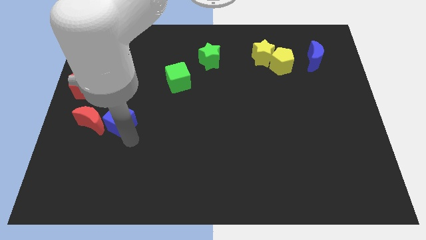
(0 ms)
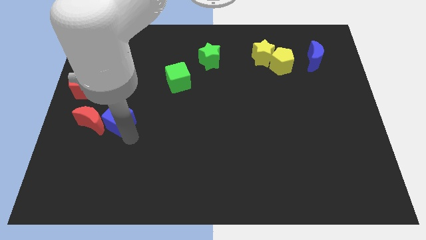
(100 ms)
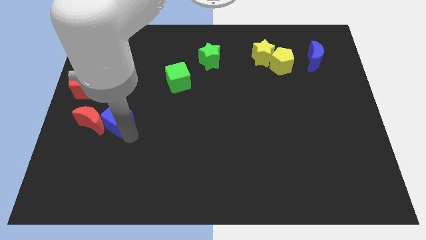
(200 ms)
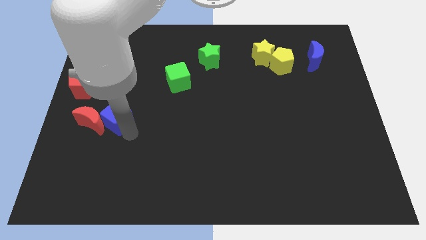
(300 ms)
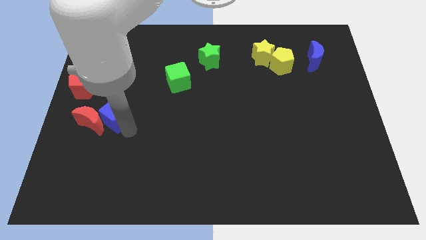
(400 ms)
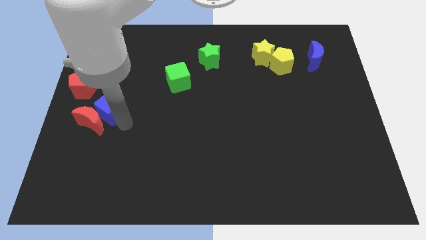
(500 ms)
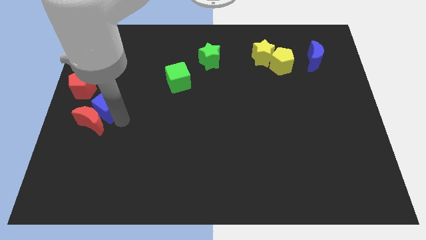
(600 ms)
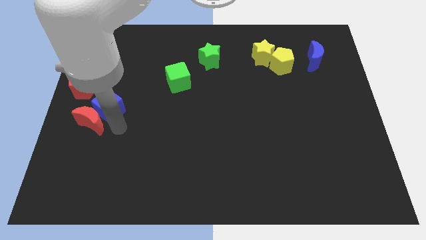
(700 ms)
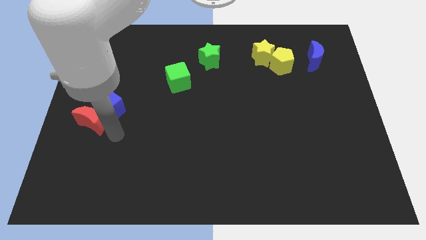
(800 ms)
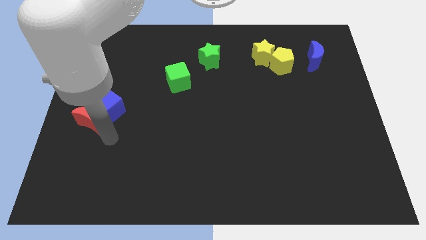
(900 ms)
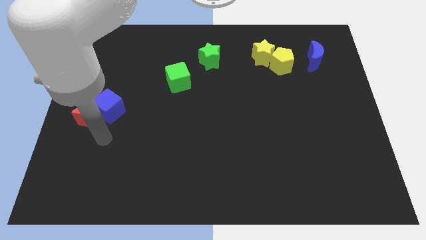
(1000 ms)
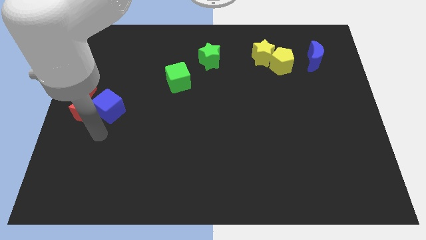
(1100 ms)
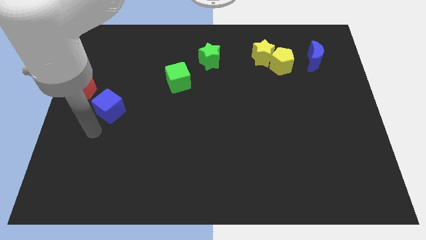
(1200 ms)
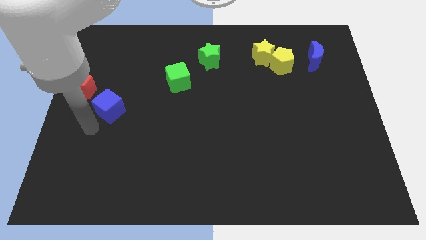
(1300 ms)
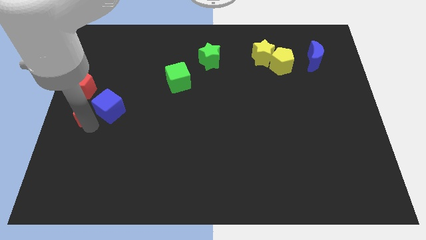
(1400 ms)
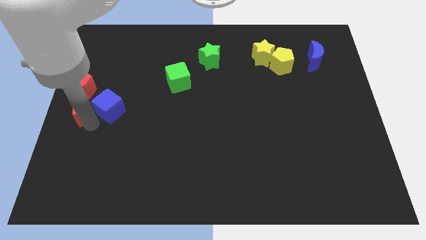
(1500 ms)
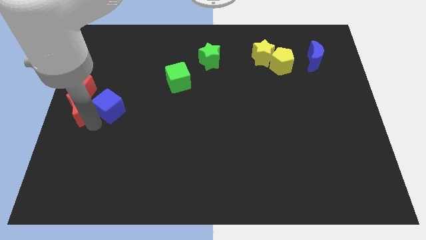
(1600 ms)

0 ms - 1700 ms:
push red moon blue cube towards red pentagon

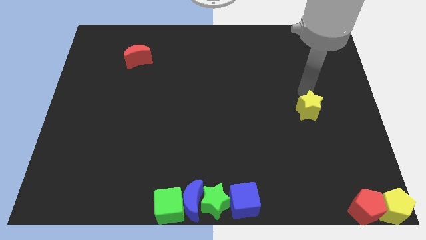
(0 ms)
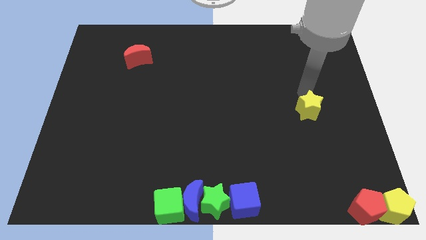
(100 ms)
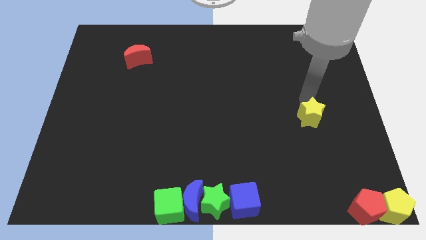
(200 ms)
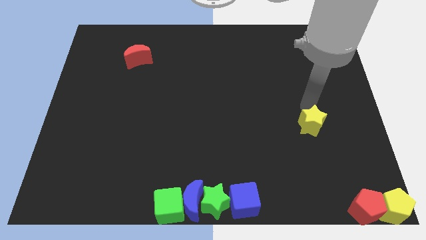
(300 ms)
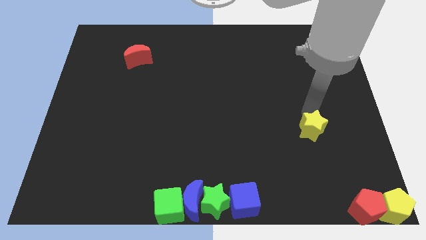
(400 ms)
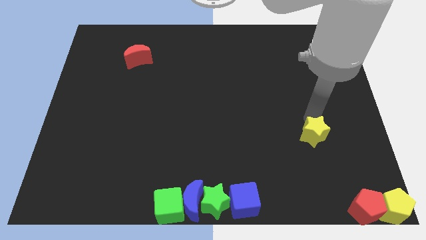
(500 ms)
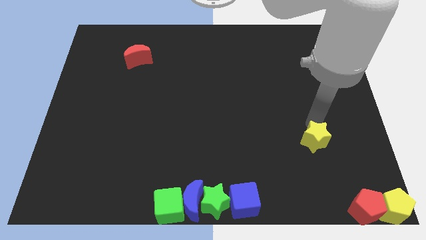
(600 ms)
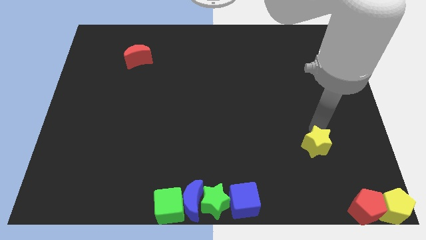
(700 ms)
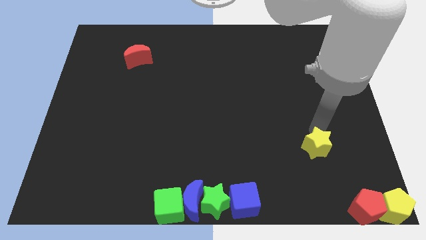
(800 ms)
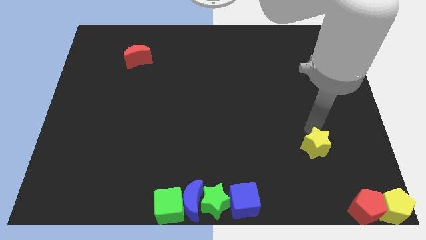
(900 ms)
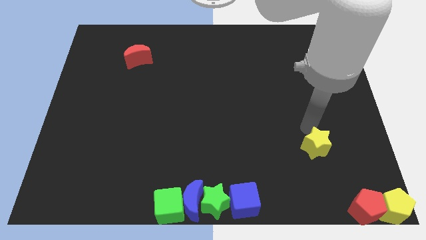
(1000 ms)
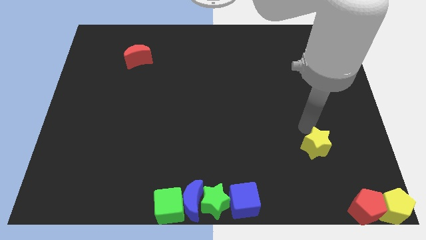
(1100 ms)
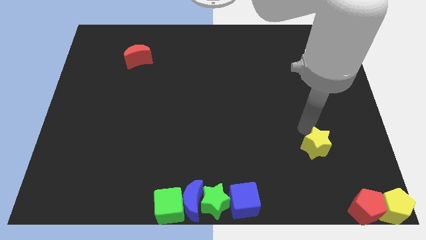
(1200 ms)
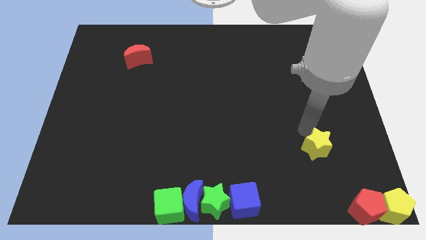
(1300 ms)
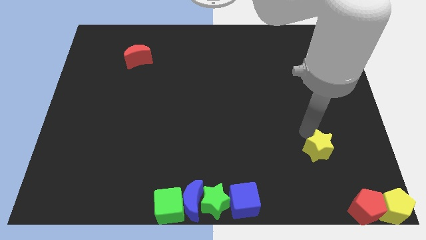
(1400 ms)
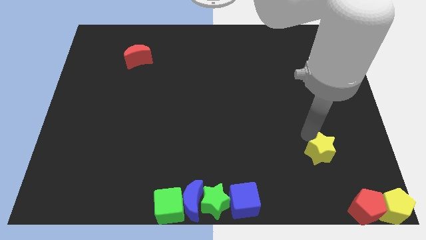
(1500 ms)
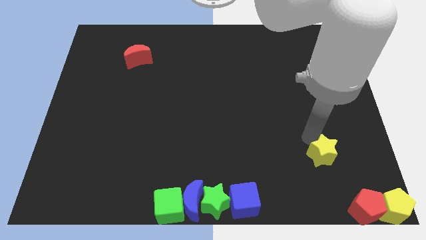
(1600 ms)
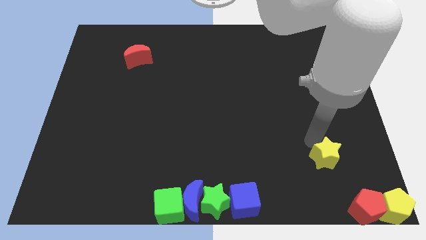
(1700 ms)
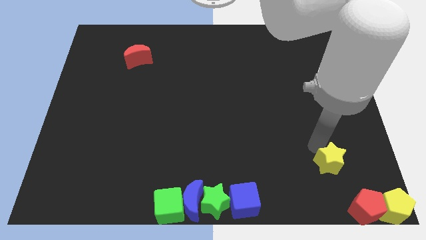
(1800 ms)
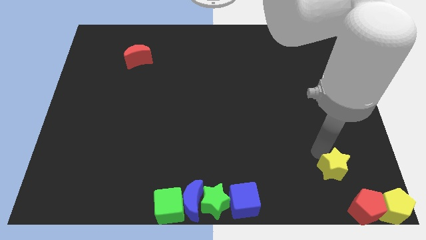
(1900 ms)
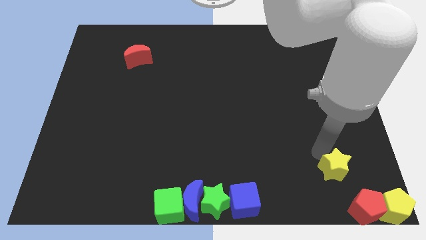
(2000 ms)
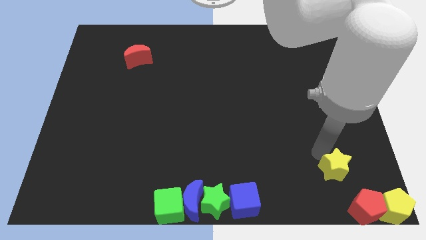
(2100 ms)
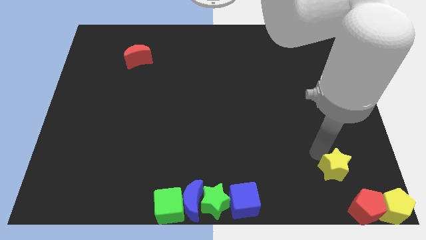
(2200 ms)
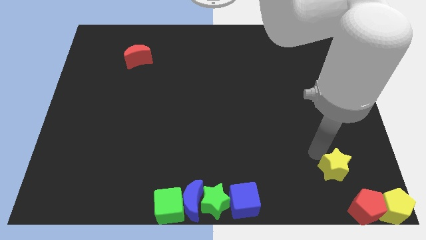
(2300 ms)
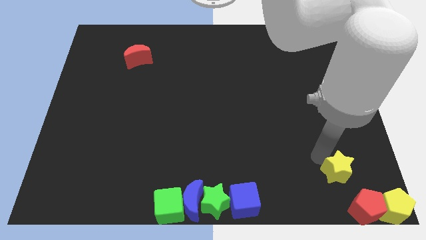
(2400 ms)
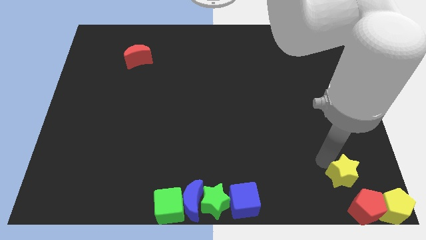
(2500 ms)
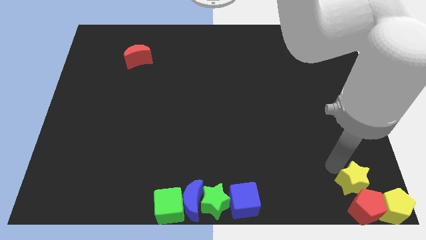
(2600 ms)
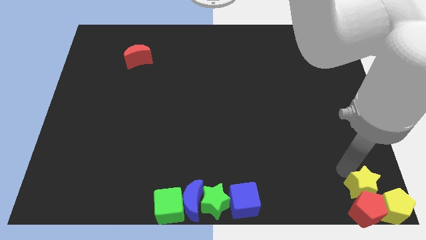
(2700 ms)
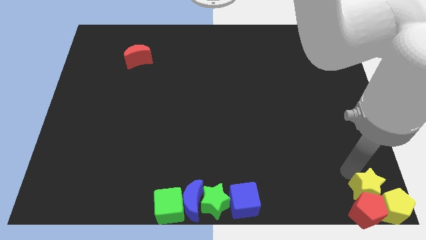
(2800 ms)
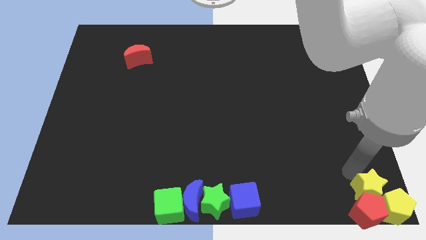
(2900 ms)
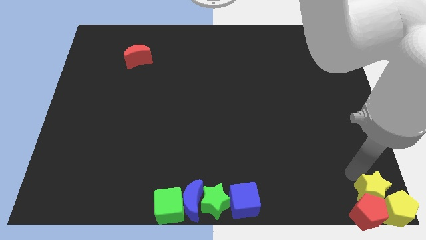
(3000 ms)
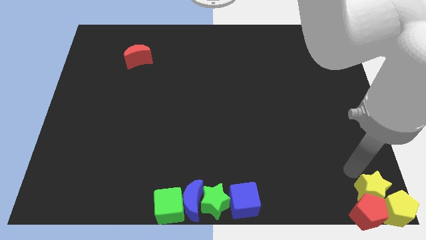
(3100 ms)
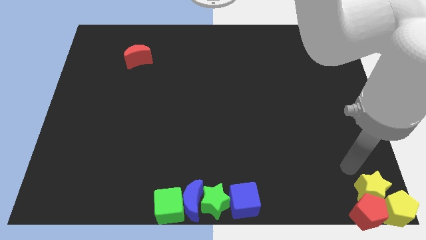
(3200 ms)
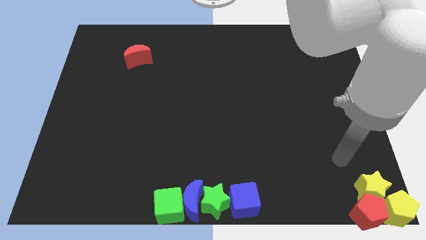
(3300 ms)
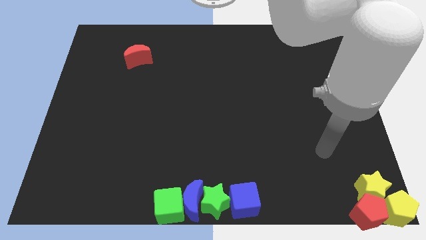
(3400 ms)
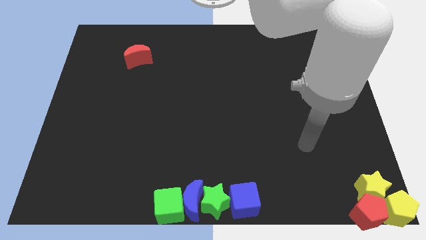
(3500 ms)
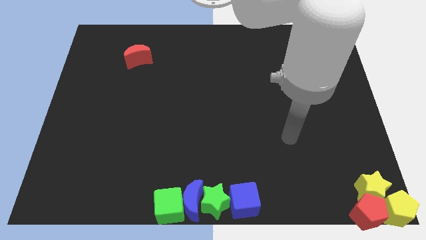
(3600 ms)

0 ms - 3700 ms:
move the yellow star into the yellow pentagon and red pentagon

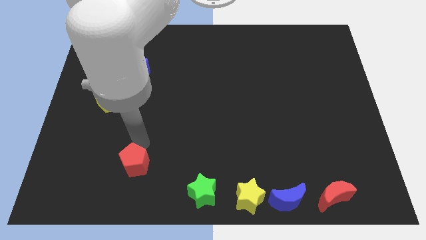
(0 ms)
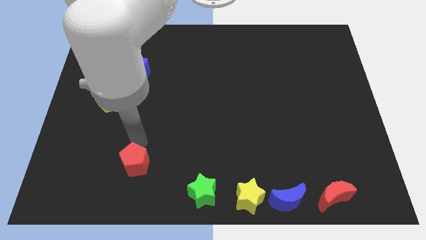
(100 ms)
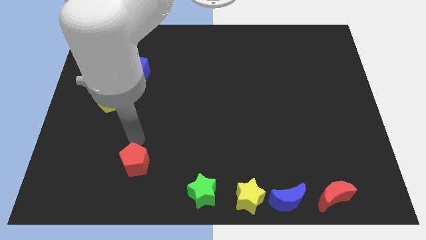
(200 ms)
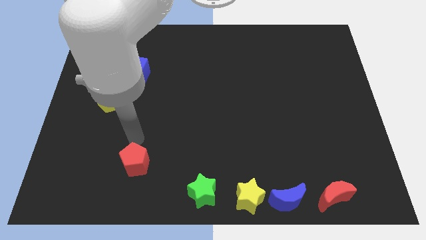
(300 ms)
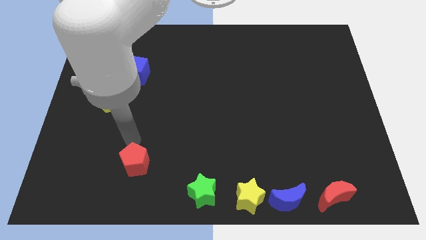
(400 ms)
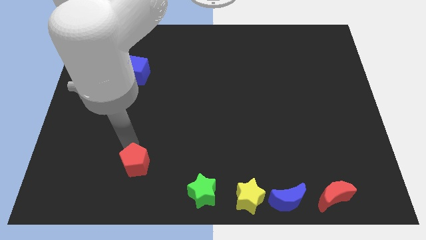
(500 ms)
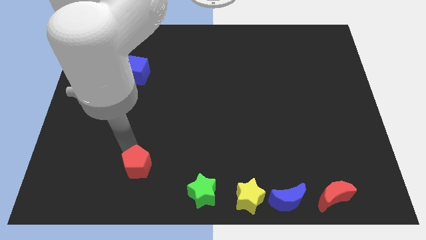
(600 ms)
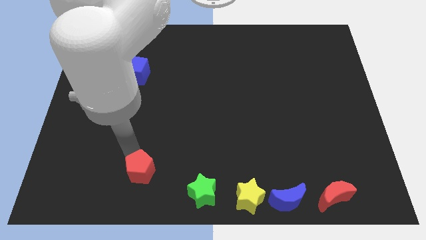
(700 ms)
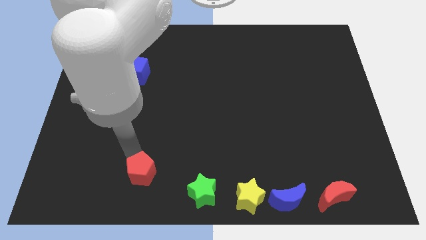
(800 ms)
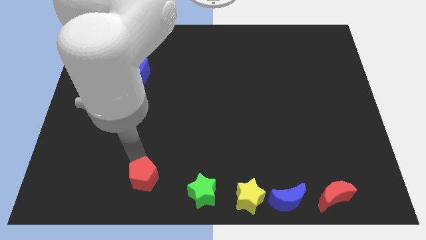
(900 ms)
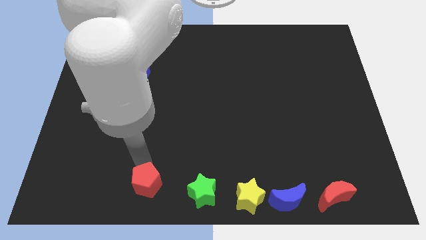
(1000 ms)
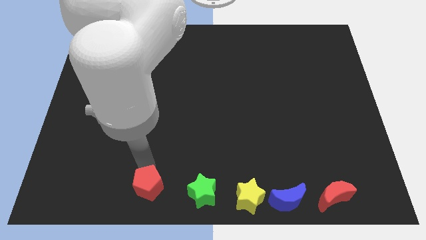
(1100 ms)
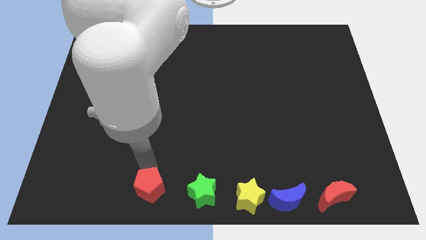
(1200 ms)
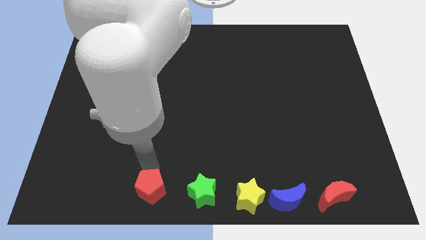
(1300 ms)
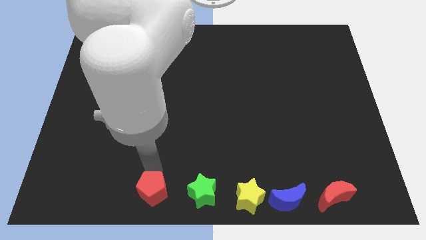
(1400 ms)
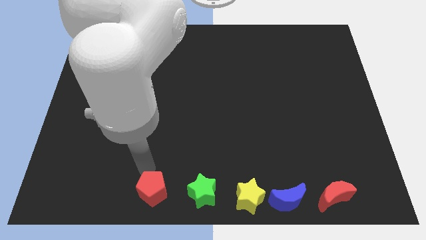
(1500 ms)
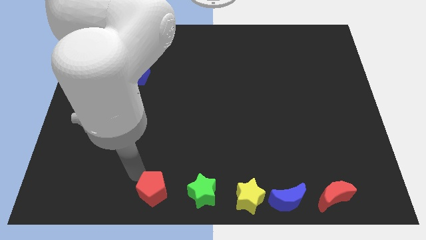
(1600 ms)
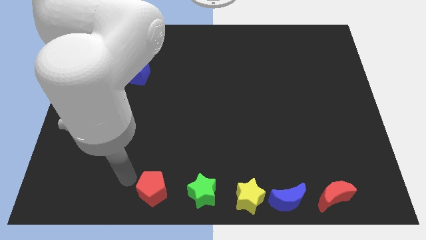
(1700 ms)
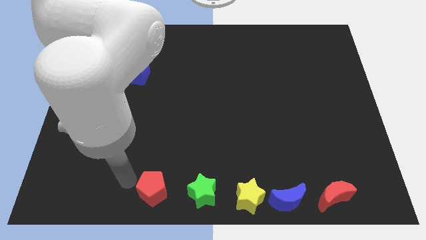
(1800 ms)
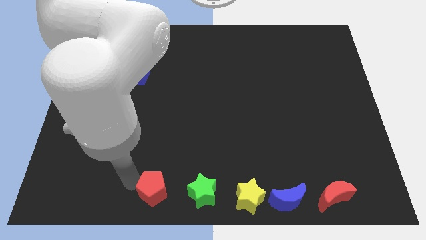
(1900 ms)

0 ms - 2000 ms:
place the red pentagon at left side of the green star

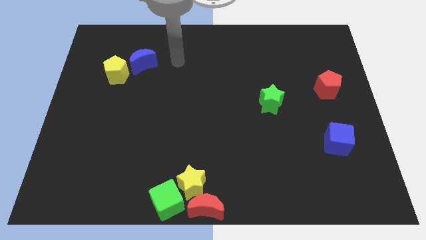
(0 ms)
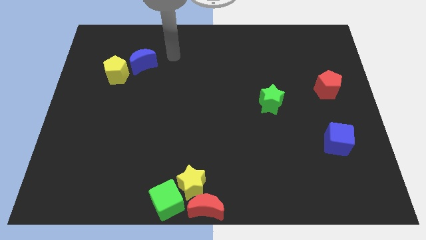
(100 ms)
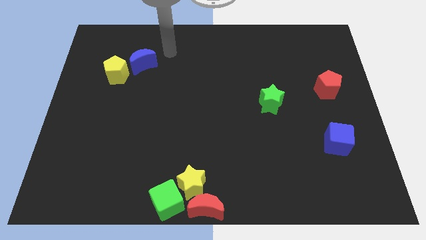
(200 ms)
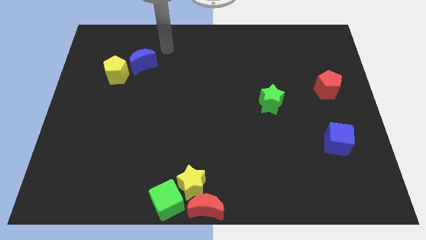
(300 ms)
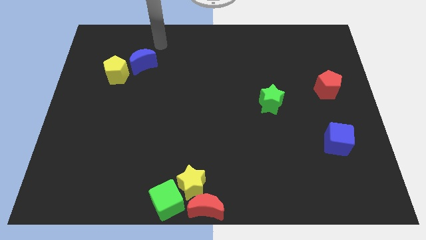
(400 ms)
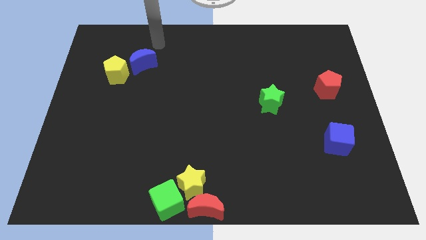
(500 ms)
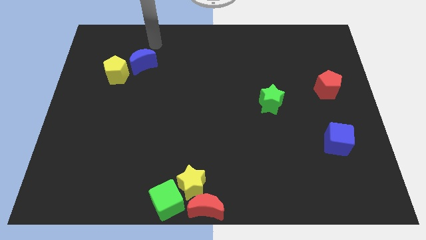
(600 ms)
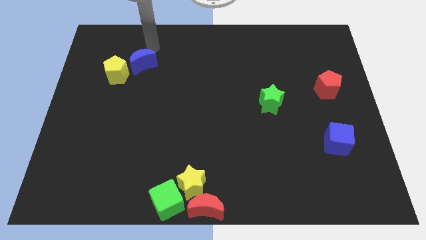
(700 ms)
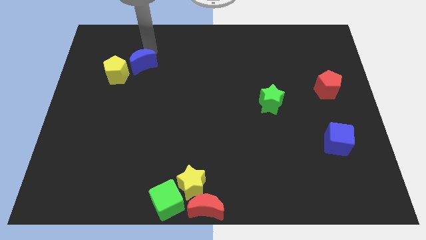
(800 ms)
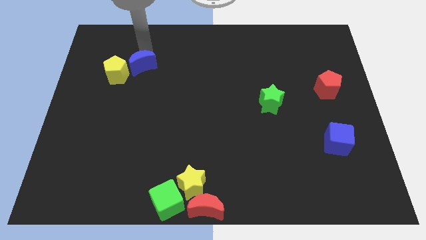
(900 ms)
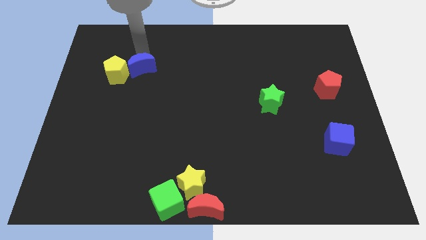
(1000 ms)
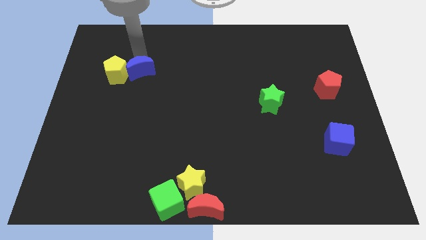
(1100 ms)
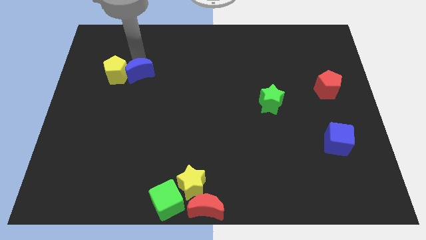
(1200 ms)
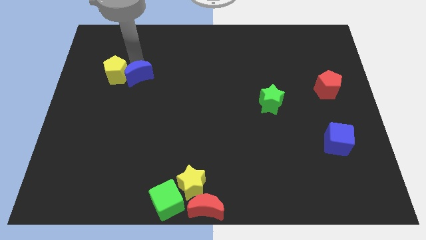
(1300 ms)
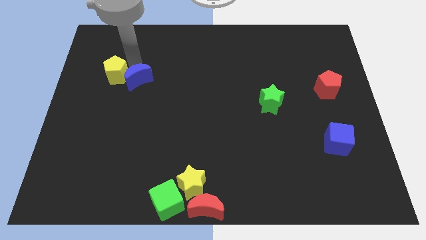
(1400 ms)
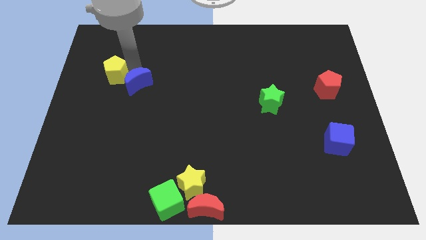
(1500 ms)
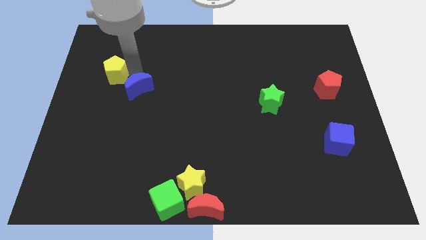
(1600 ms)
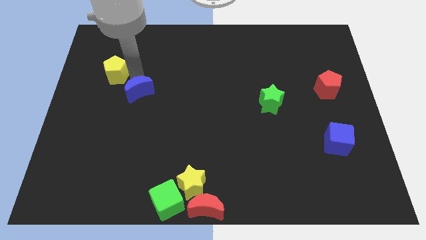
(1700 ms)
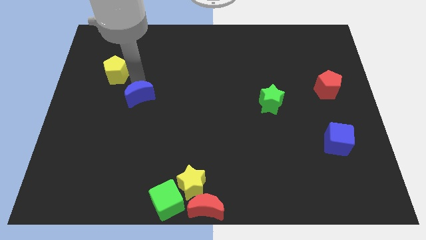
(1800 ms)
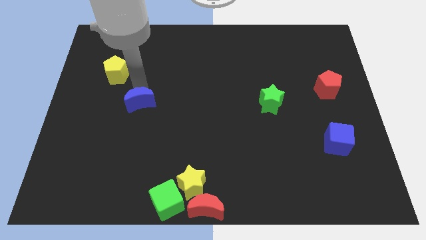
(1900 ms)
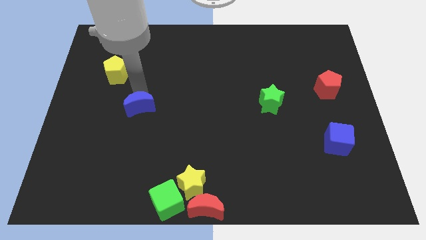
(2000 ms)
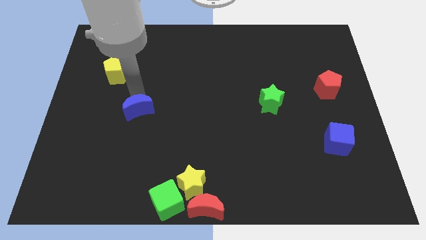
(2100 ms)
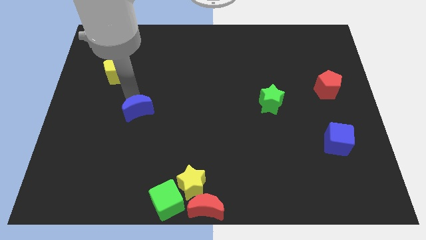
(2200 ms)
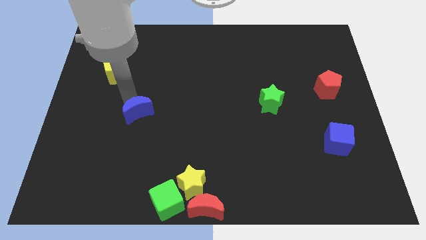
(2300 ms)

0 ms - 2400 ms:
move the blue crescent away from the yellow pentagon
